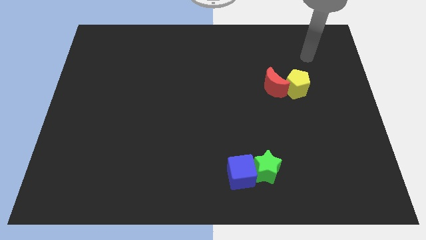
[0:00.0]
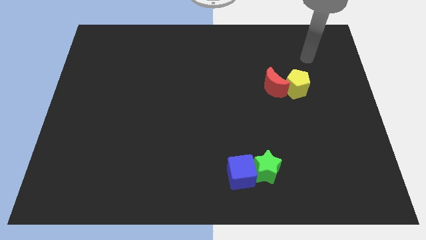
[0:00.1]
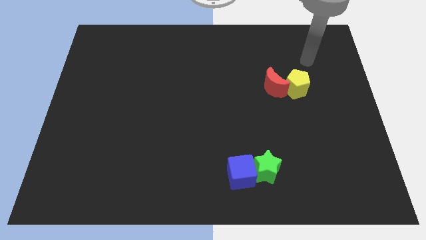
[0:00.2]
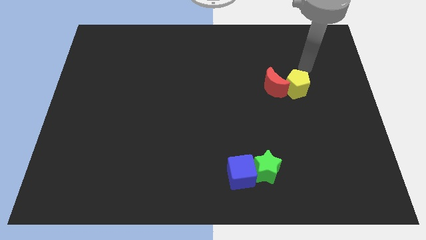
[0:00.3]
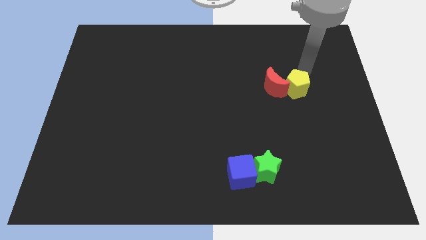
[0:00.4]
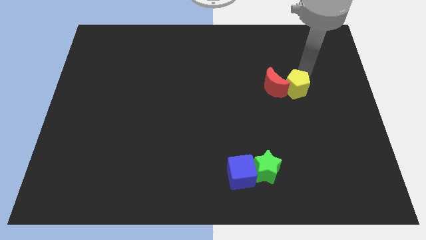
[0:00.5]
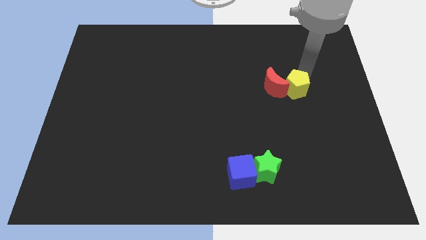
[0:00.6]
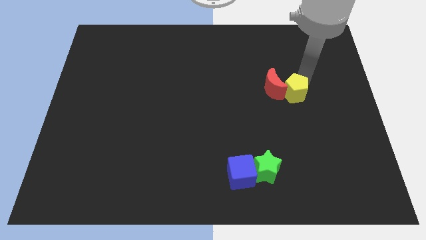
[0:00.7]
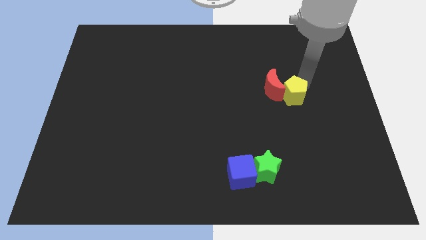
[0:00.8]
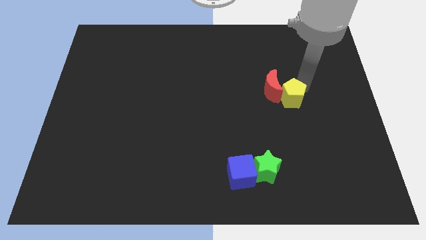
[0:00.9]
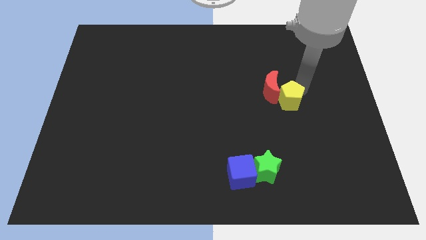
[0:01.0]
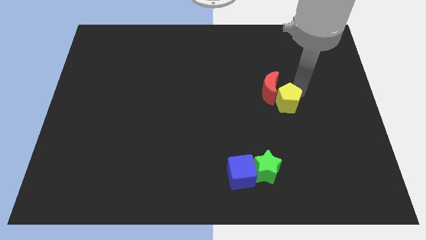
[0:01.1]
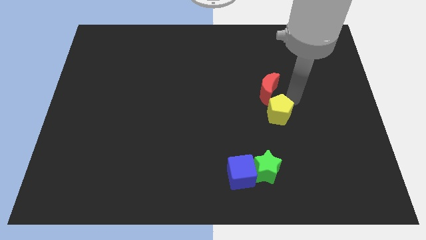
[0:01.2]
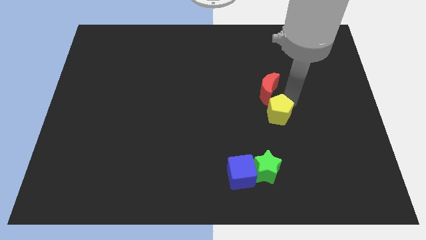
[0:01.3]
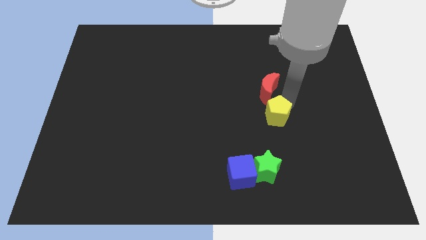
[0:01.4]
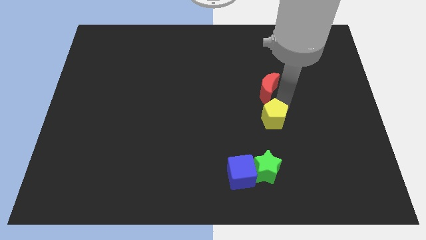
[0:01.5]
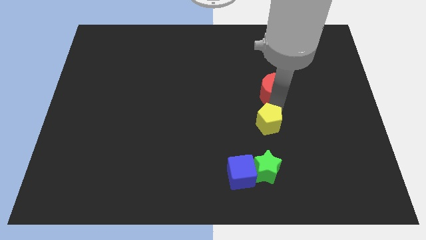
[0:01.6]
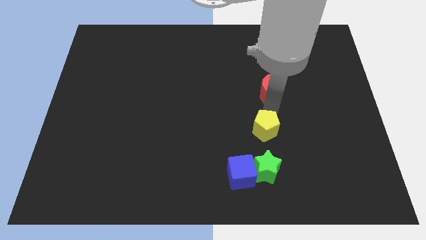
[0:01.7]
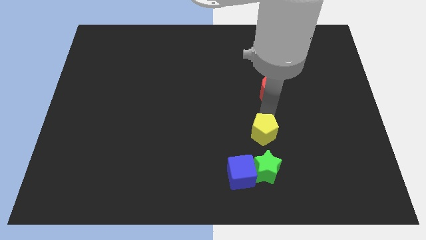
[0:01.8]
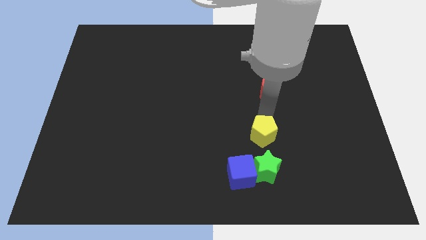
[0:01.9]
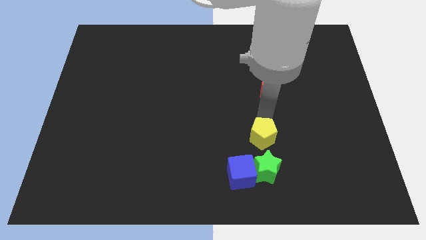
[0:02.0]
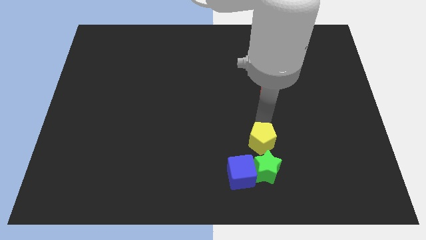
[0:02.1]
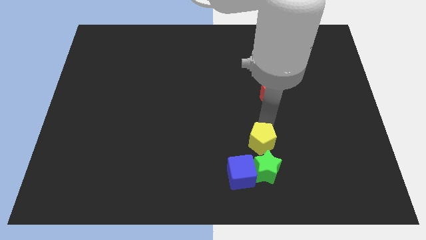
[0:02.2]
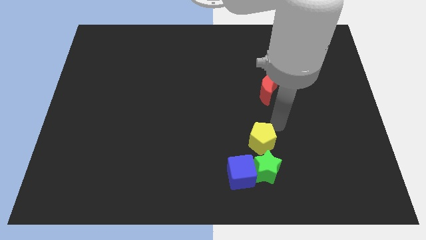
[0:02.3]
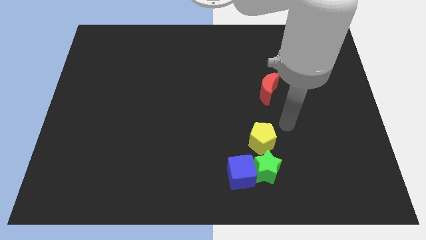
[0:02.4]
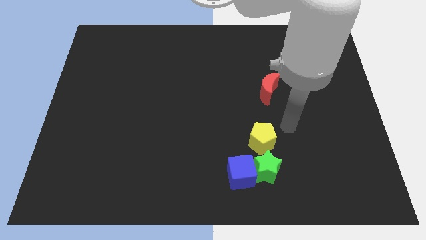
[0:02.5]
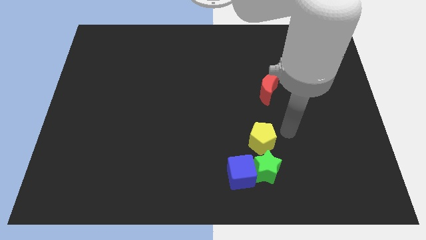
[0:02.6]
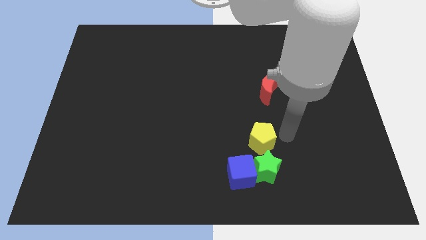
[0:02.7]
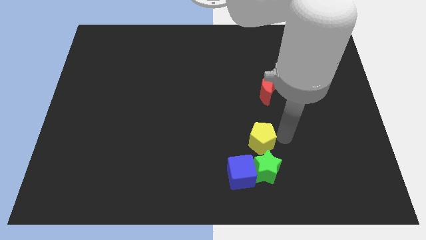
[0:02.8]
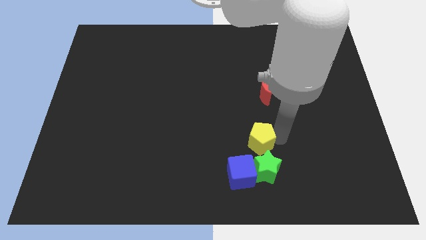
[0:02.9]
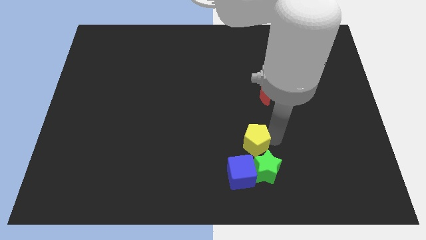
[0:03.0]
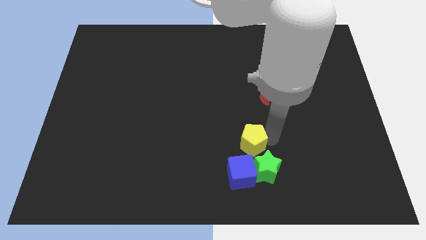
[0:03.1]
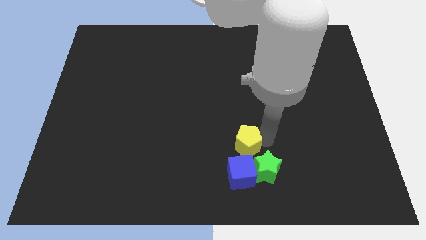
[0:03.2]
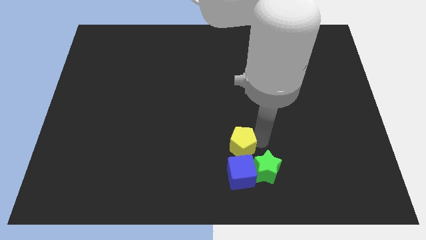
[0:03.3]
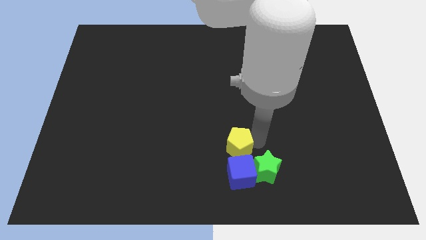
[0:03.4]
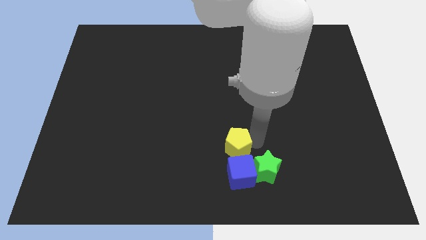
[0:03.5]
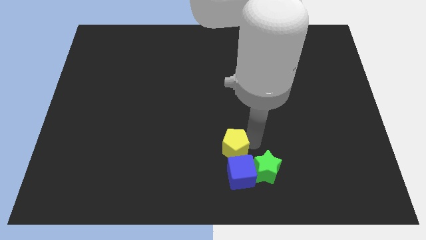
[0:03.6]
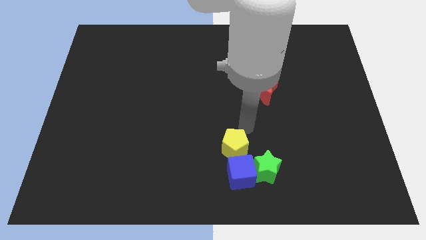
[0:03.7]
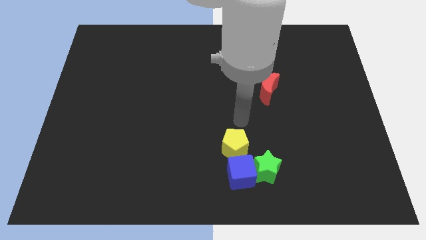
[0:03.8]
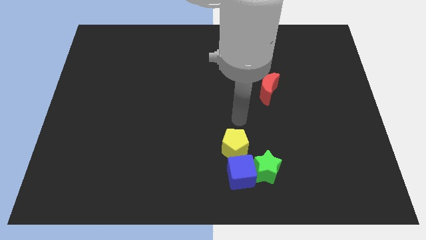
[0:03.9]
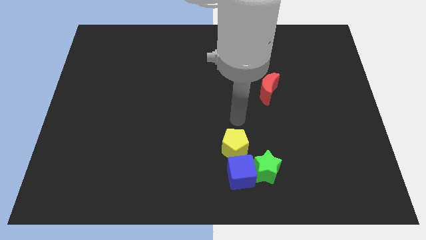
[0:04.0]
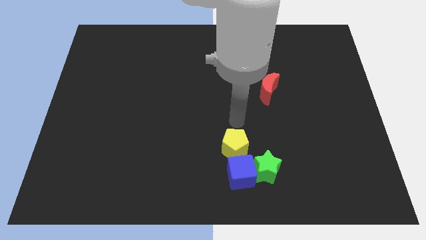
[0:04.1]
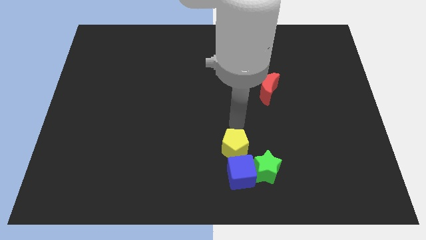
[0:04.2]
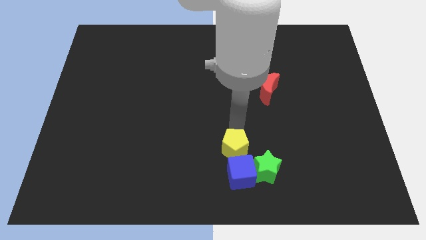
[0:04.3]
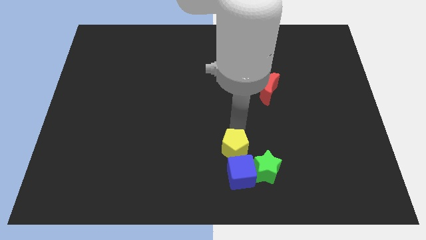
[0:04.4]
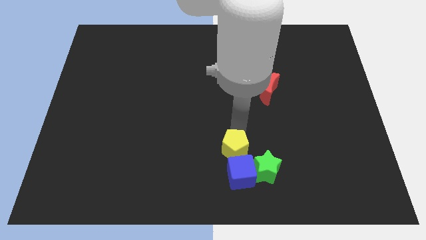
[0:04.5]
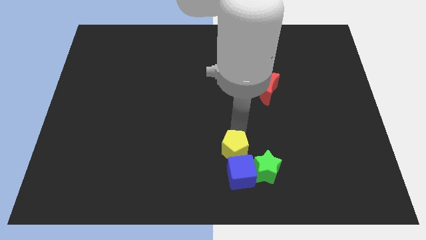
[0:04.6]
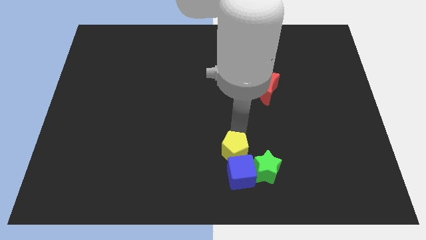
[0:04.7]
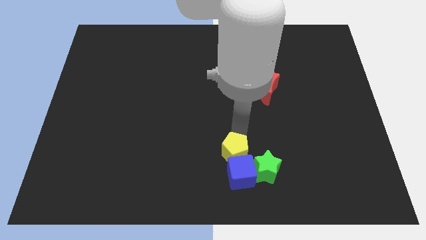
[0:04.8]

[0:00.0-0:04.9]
slide the yellow block close to the cube

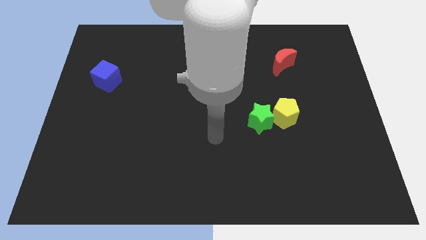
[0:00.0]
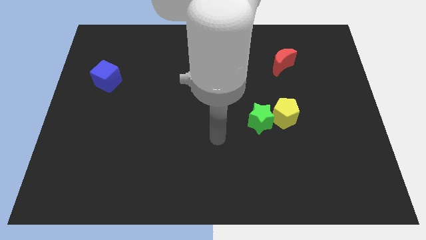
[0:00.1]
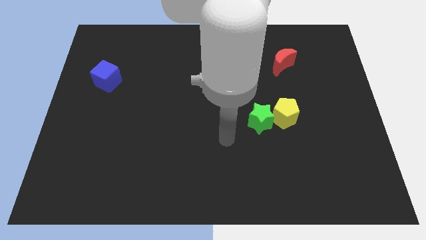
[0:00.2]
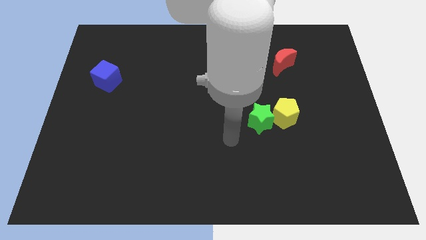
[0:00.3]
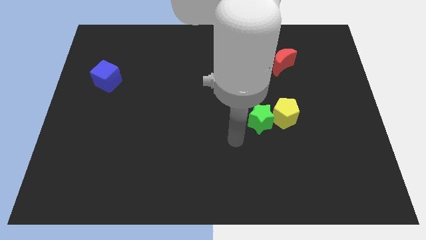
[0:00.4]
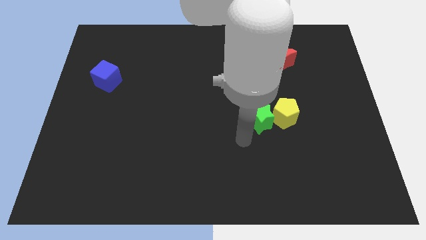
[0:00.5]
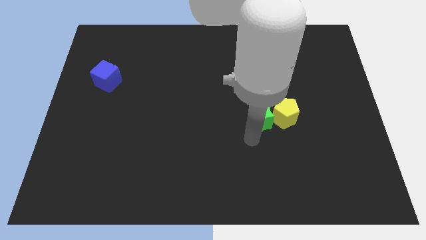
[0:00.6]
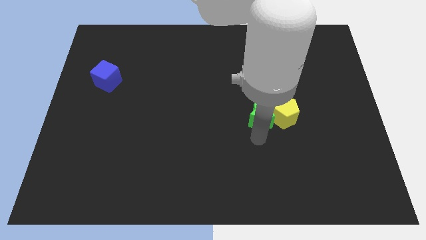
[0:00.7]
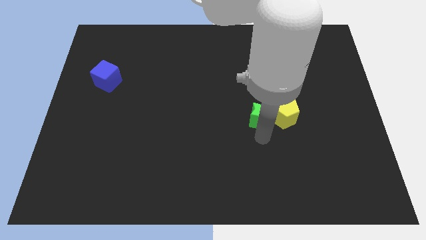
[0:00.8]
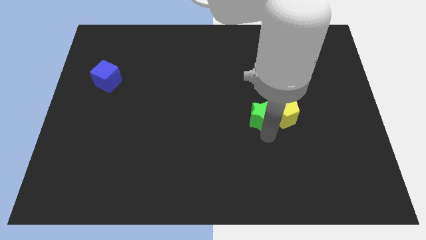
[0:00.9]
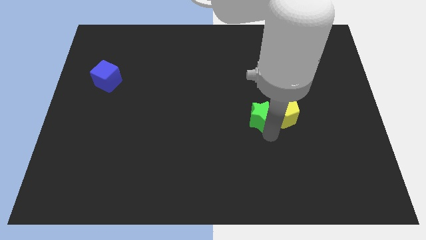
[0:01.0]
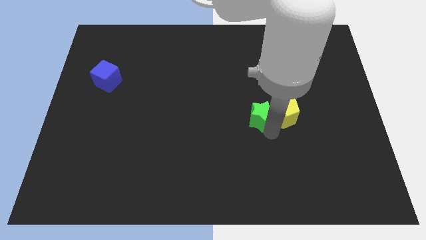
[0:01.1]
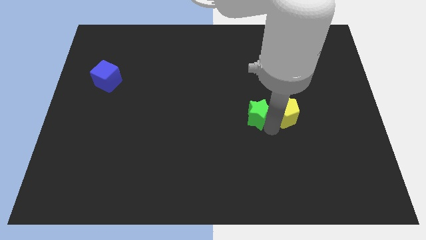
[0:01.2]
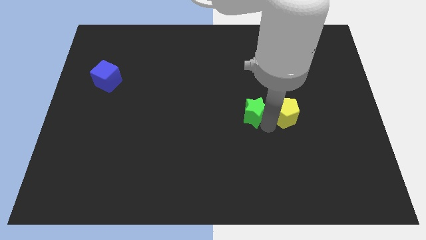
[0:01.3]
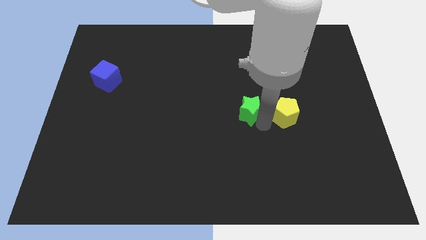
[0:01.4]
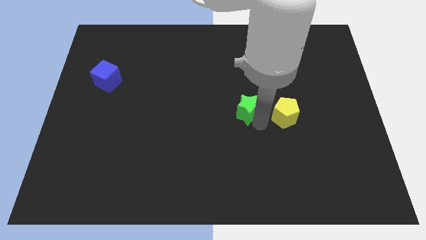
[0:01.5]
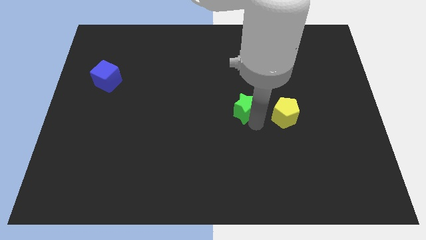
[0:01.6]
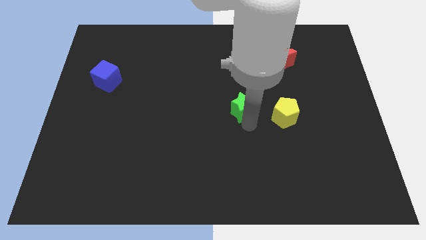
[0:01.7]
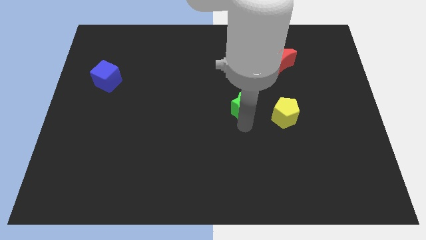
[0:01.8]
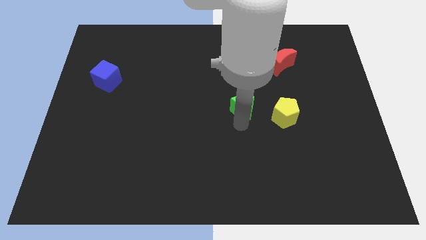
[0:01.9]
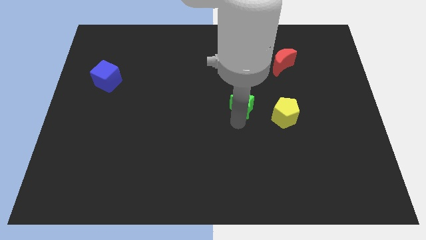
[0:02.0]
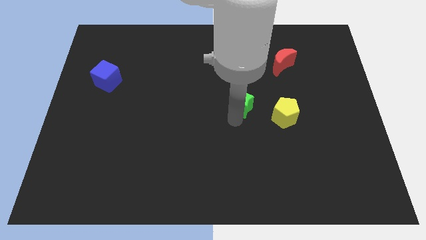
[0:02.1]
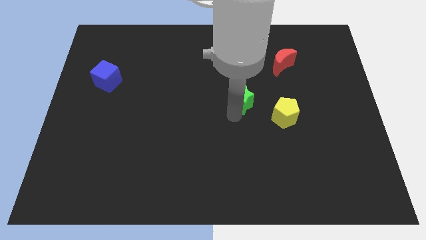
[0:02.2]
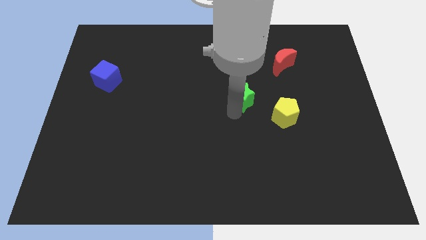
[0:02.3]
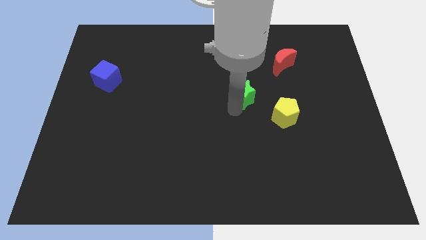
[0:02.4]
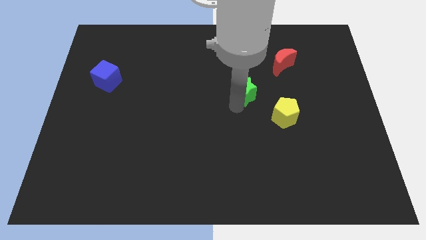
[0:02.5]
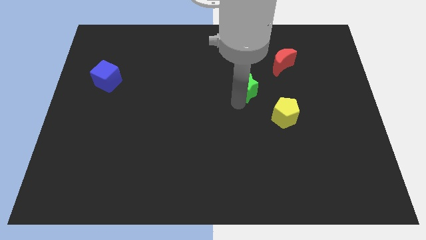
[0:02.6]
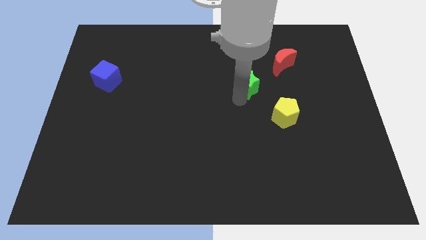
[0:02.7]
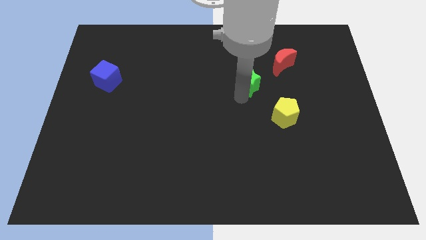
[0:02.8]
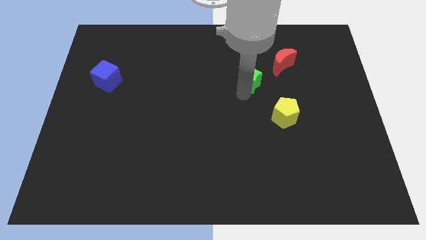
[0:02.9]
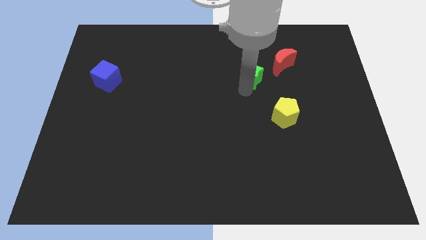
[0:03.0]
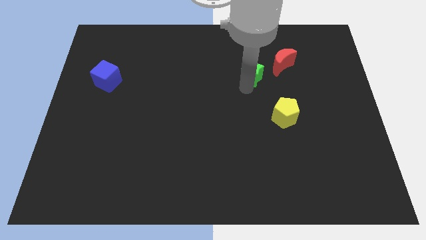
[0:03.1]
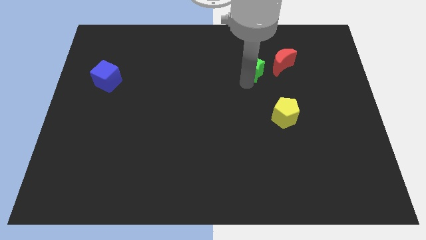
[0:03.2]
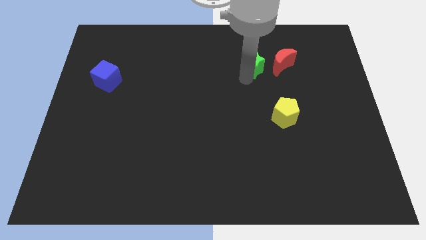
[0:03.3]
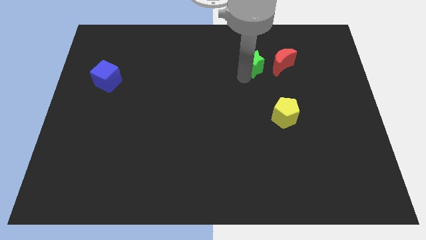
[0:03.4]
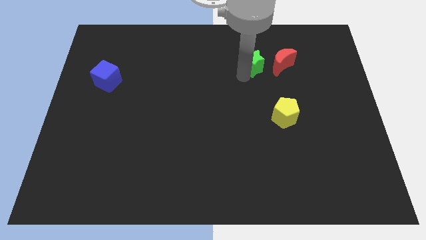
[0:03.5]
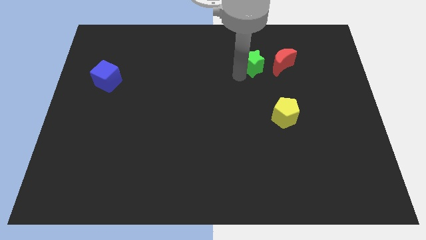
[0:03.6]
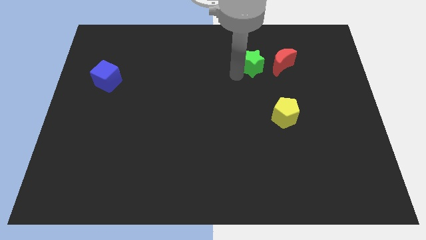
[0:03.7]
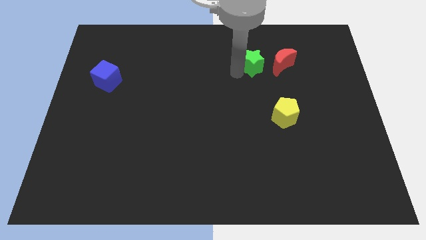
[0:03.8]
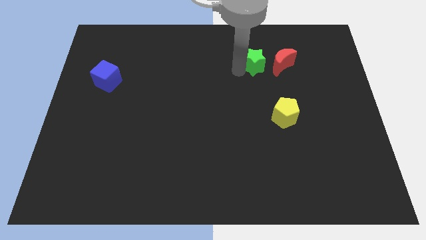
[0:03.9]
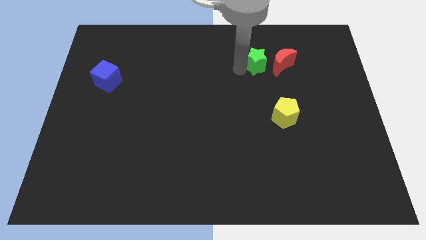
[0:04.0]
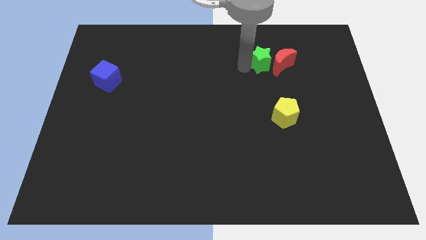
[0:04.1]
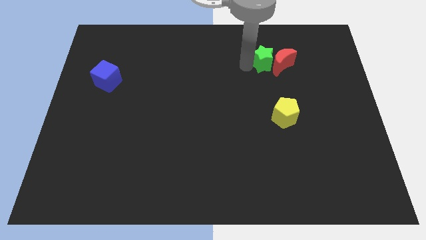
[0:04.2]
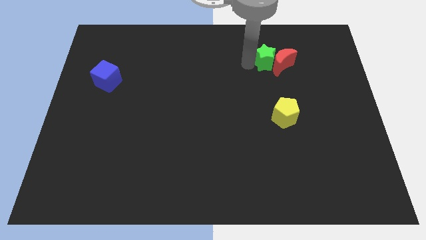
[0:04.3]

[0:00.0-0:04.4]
move the green block towards the red moon
